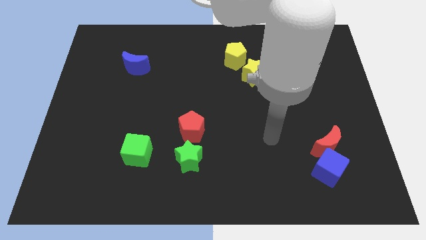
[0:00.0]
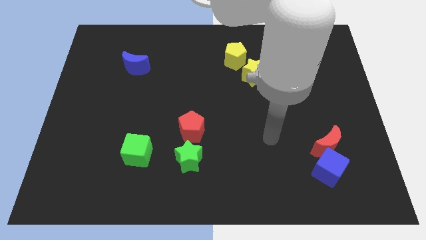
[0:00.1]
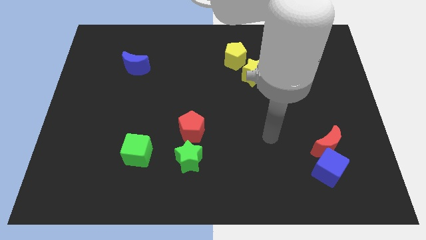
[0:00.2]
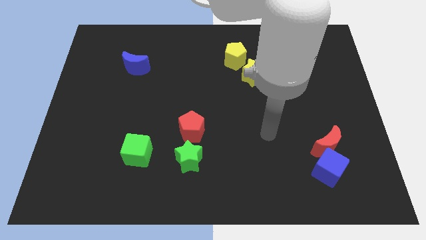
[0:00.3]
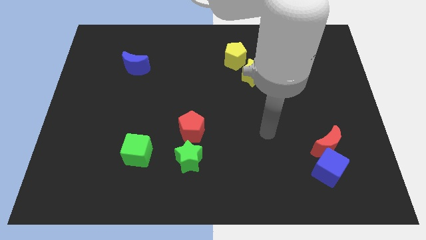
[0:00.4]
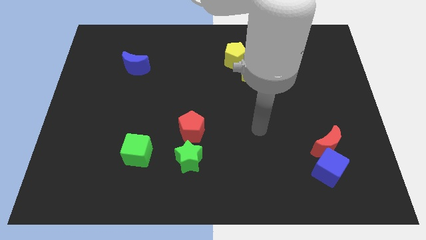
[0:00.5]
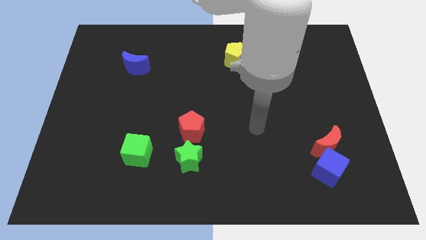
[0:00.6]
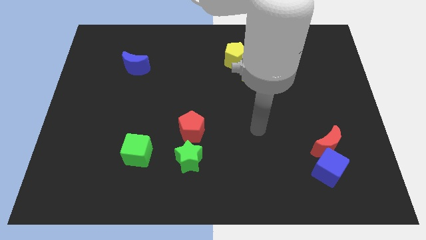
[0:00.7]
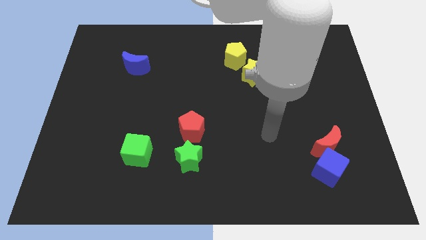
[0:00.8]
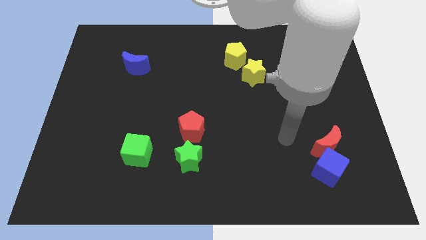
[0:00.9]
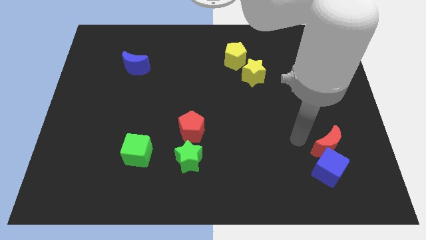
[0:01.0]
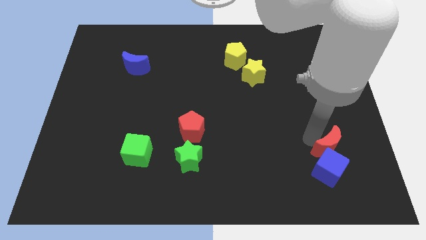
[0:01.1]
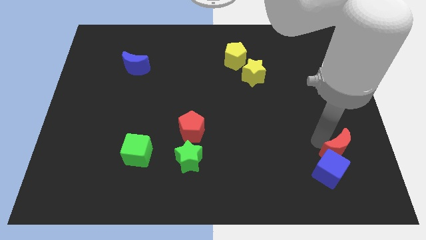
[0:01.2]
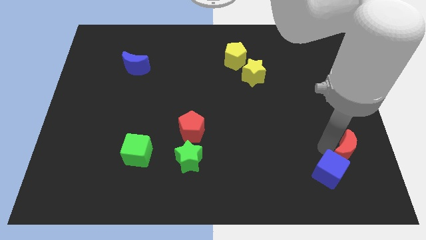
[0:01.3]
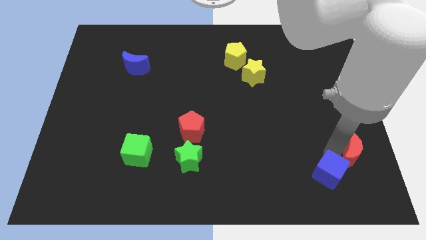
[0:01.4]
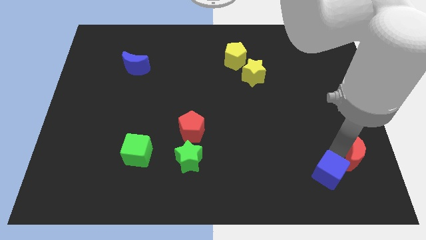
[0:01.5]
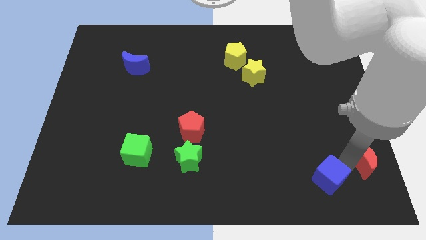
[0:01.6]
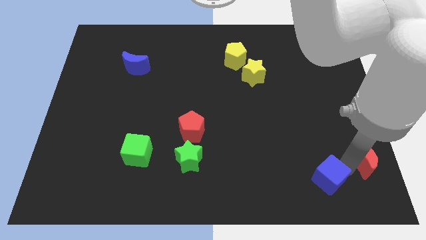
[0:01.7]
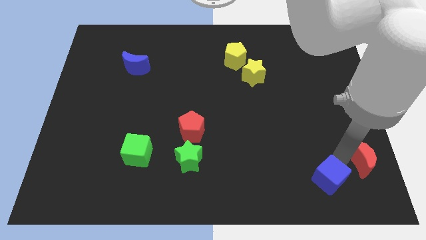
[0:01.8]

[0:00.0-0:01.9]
separate the red moon and blue cube from each other

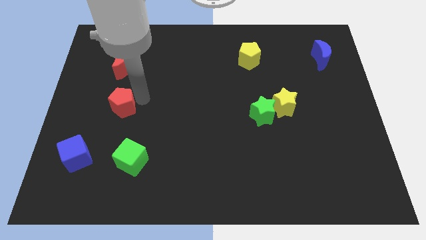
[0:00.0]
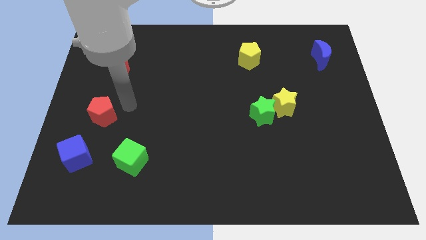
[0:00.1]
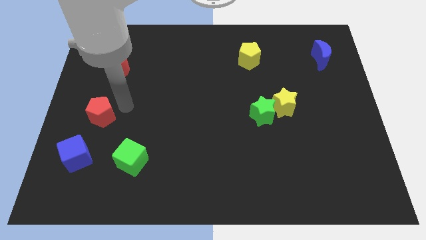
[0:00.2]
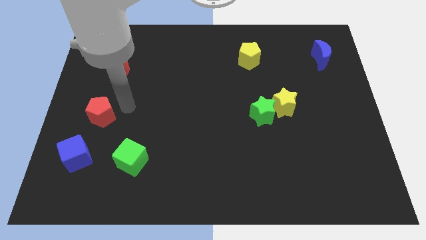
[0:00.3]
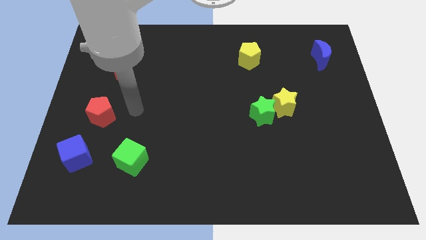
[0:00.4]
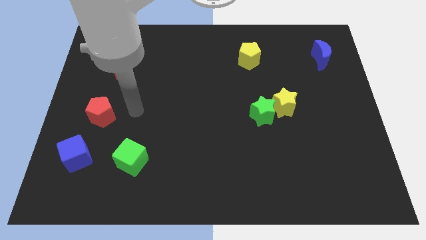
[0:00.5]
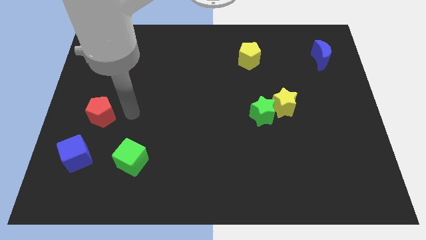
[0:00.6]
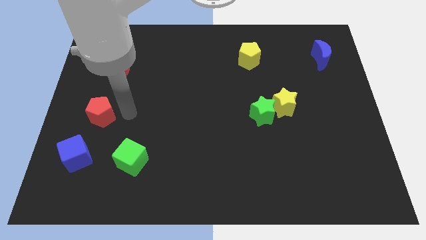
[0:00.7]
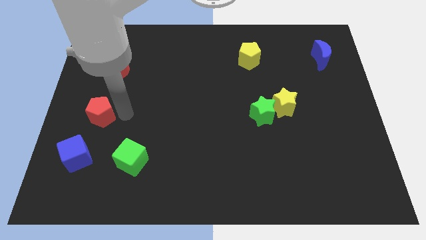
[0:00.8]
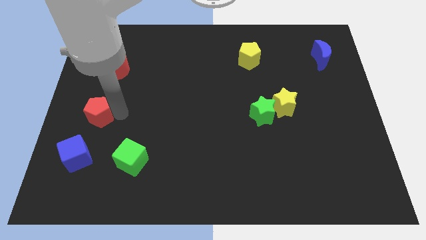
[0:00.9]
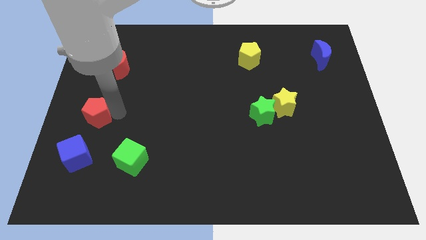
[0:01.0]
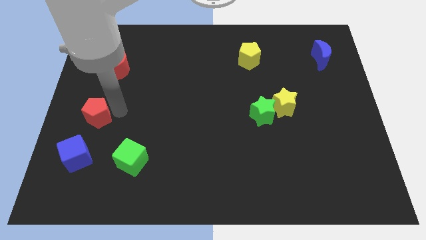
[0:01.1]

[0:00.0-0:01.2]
make a traingle by placing red pentagon

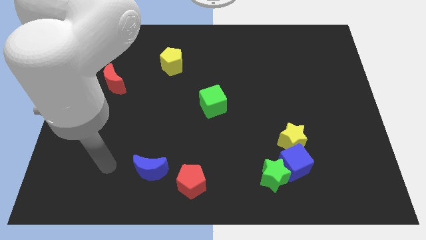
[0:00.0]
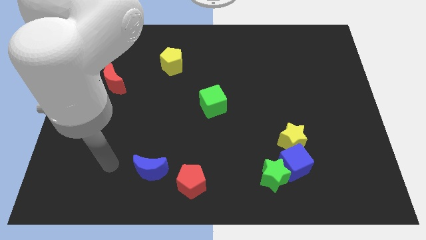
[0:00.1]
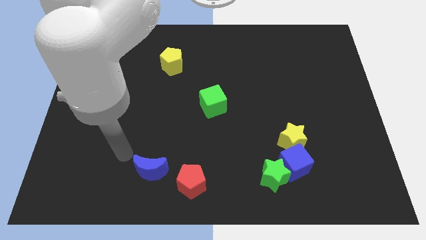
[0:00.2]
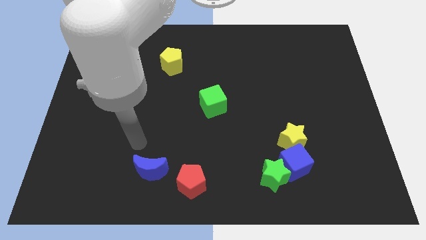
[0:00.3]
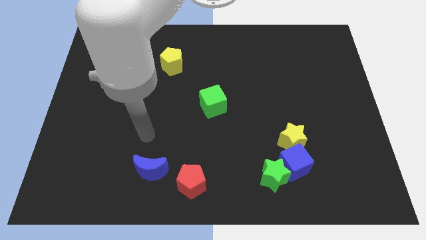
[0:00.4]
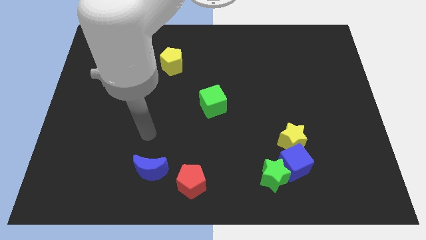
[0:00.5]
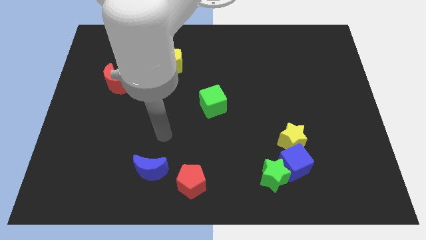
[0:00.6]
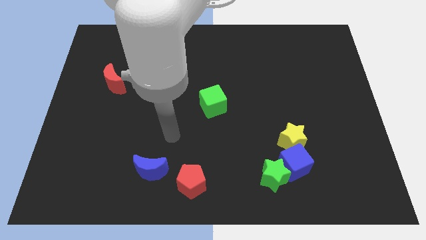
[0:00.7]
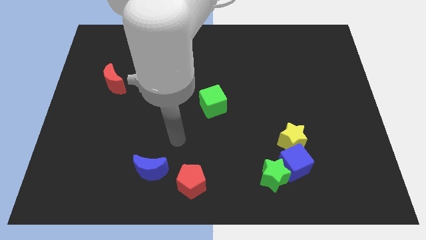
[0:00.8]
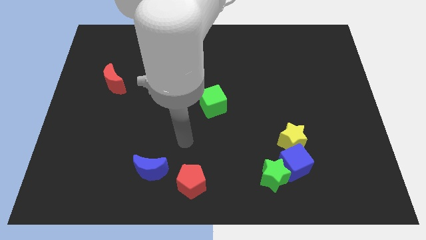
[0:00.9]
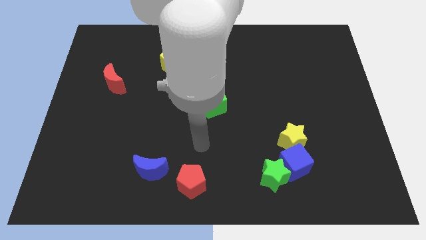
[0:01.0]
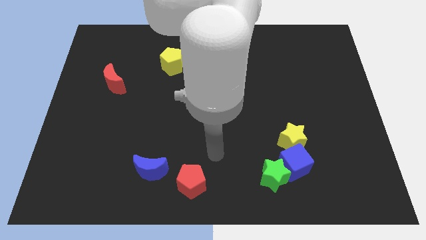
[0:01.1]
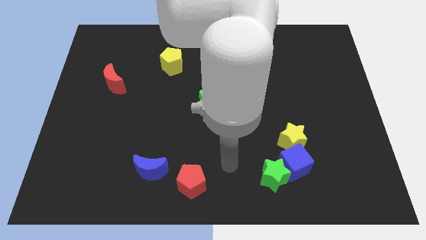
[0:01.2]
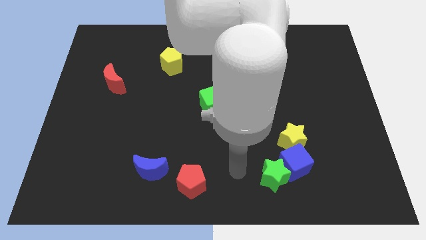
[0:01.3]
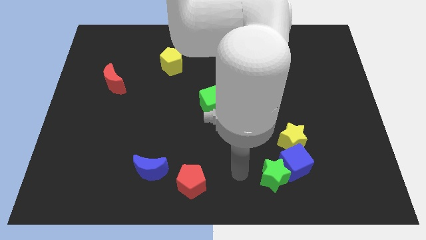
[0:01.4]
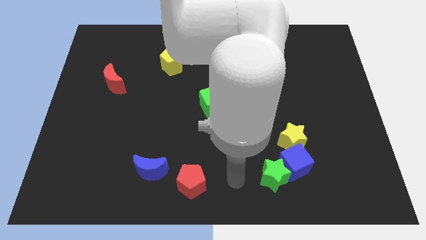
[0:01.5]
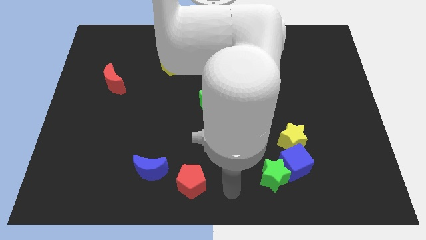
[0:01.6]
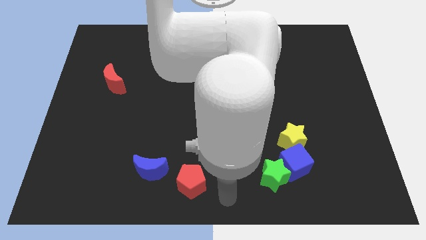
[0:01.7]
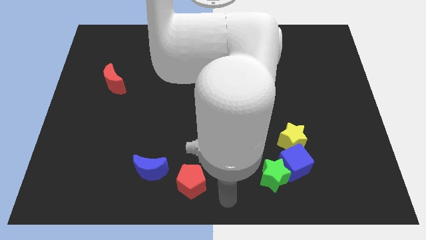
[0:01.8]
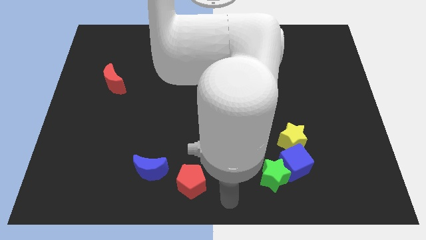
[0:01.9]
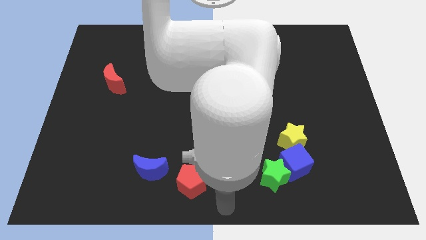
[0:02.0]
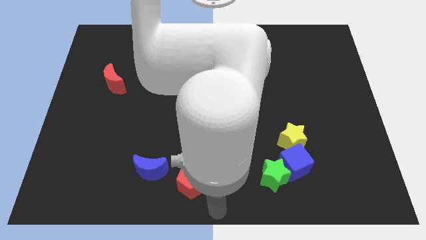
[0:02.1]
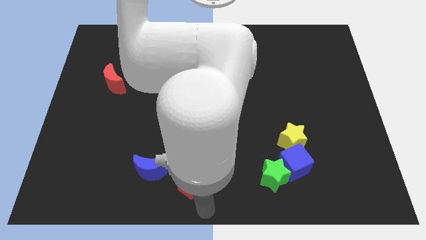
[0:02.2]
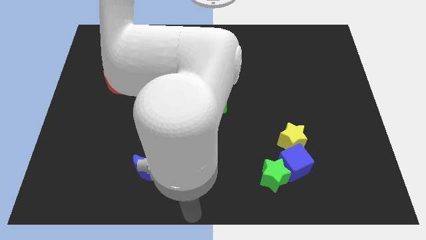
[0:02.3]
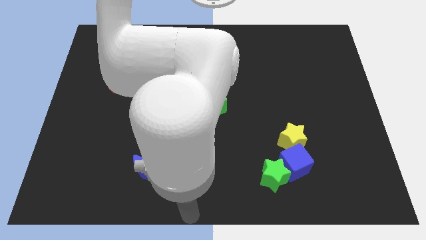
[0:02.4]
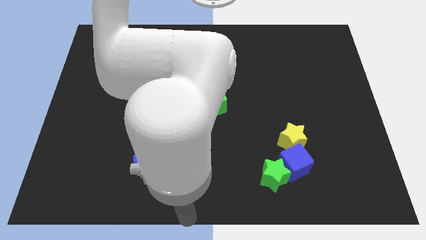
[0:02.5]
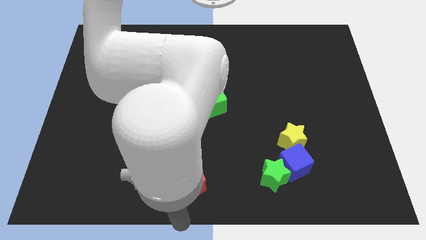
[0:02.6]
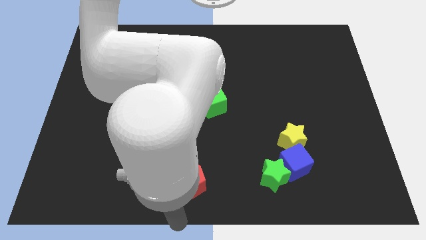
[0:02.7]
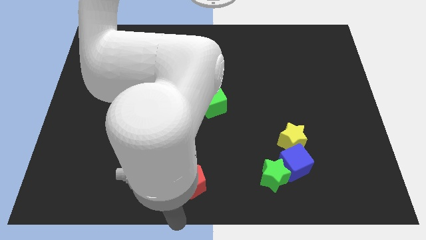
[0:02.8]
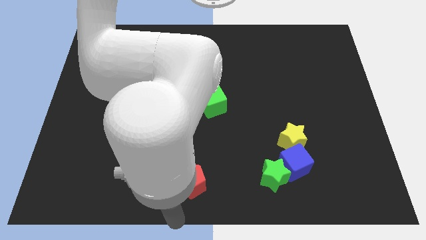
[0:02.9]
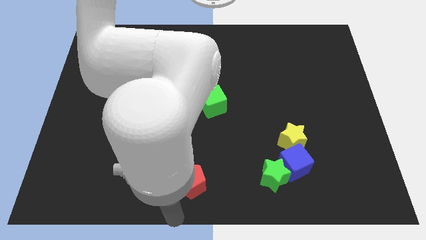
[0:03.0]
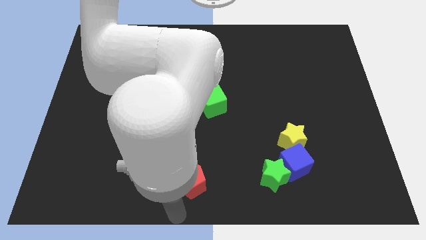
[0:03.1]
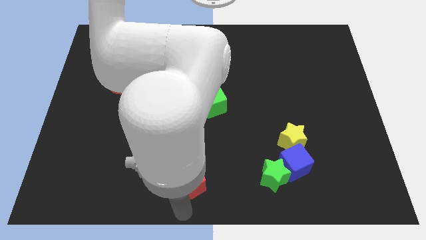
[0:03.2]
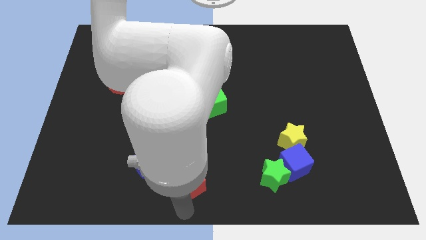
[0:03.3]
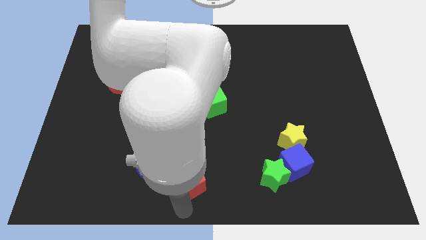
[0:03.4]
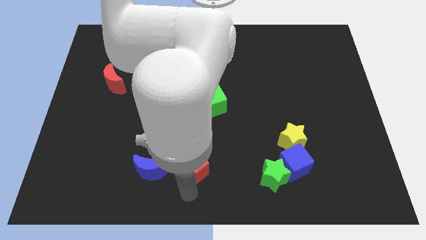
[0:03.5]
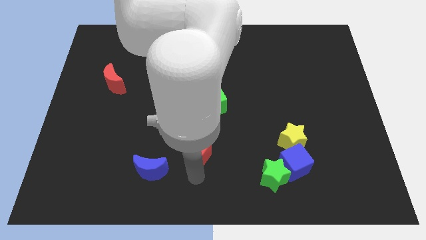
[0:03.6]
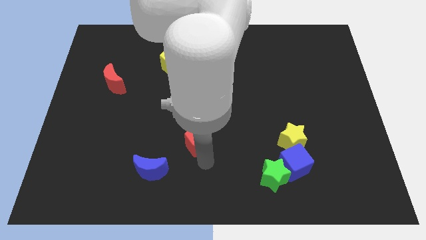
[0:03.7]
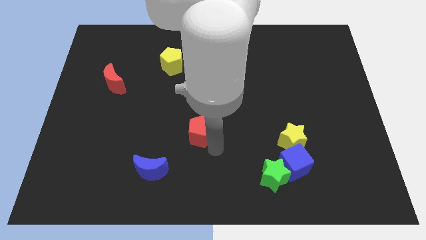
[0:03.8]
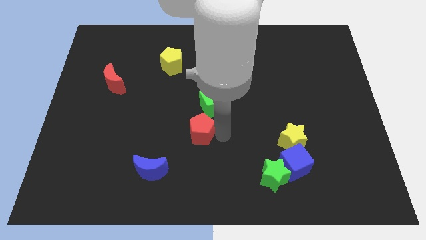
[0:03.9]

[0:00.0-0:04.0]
move the red pentagon to the center

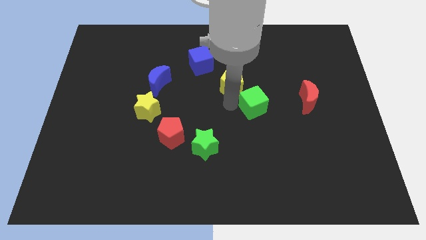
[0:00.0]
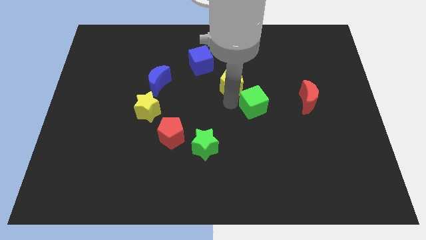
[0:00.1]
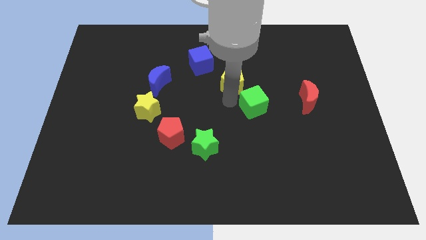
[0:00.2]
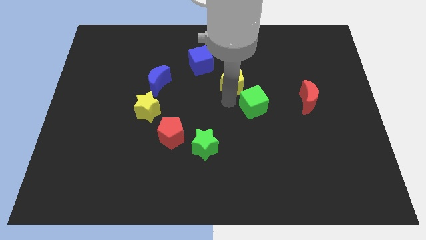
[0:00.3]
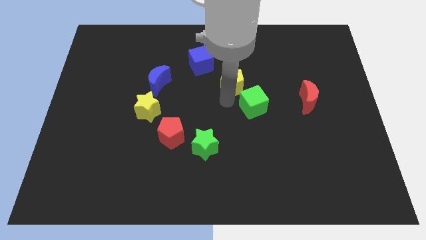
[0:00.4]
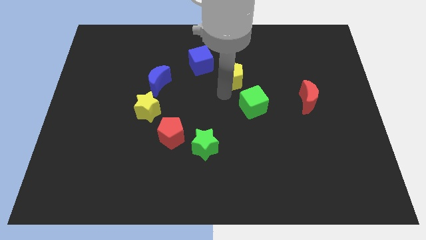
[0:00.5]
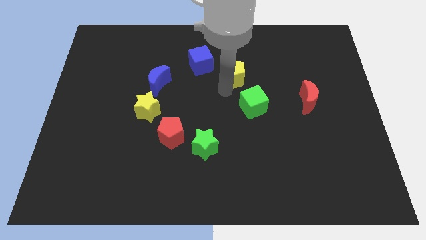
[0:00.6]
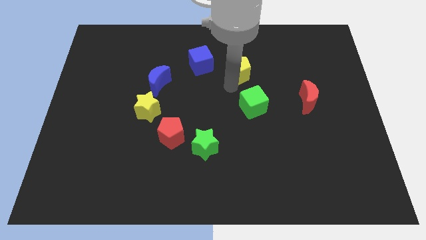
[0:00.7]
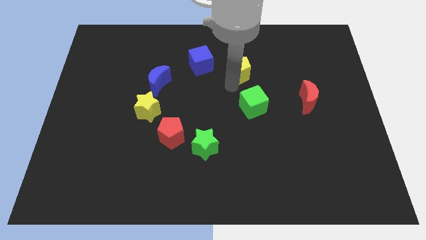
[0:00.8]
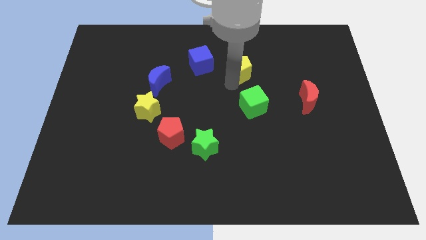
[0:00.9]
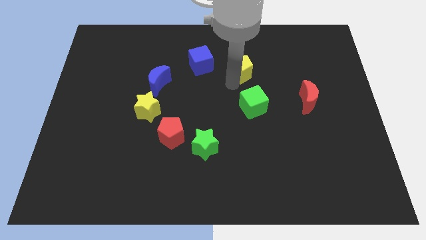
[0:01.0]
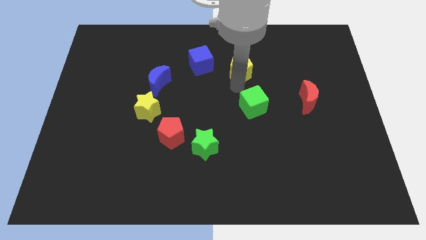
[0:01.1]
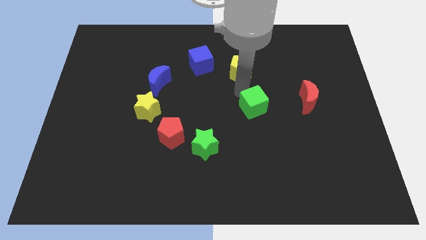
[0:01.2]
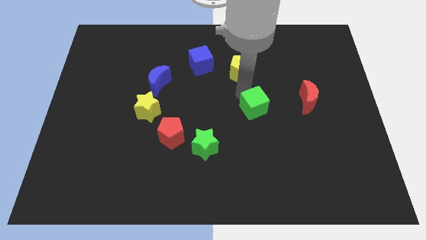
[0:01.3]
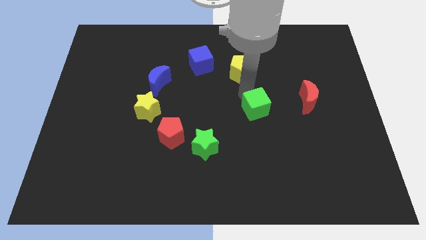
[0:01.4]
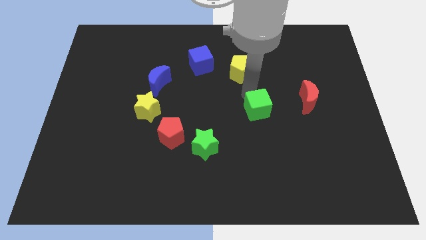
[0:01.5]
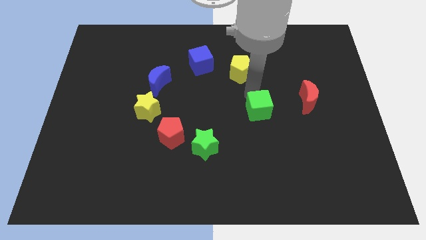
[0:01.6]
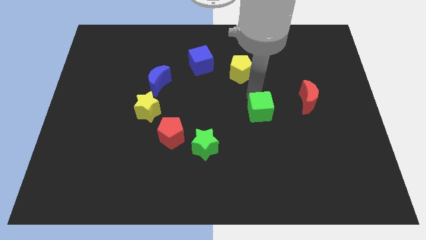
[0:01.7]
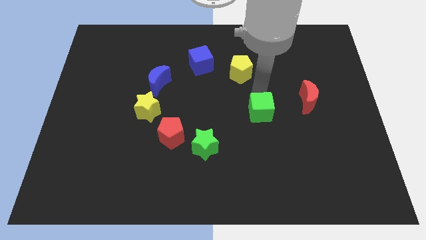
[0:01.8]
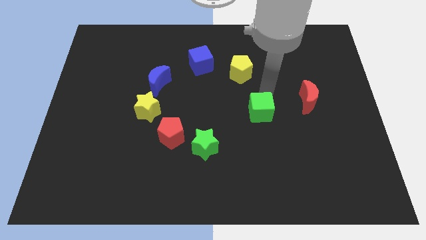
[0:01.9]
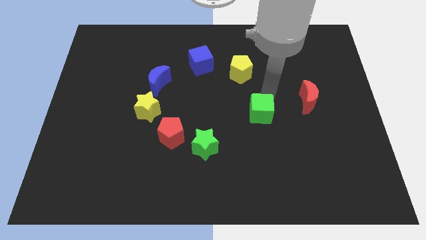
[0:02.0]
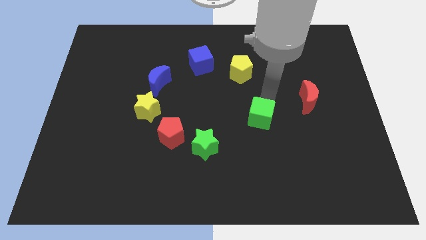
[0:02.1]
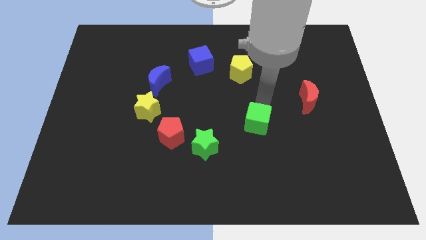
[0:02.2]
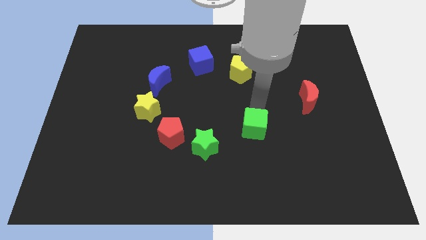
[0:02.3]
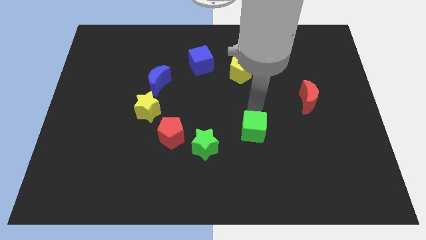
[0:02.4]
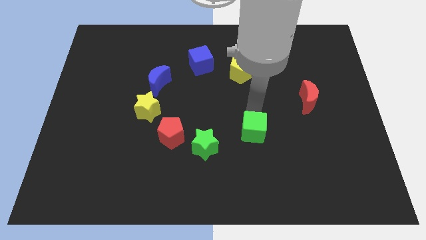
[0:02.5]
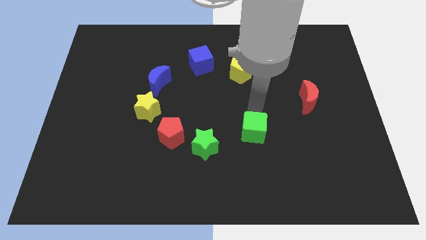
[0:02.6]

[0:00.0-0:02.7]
slightly move the green cube down
